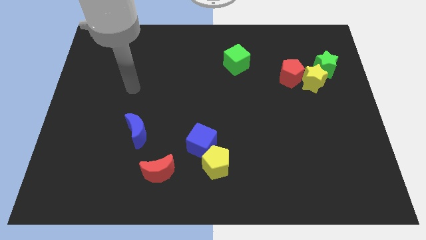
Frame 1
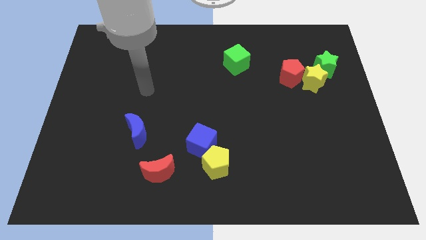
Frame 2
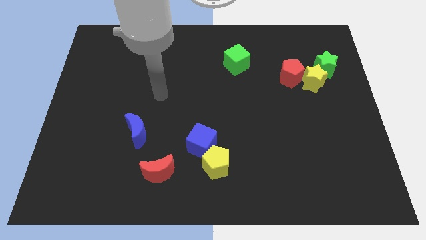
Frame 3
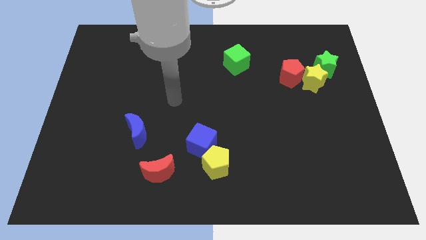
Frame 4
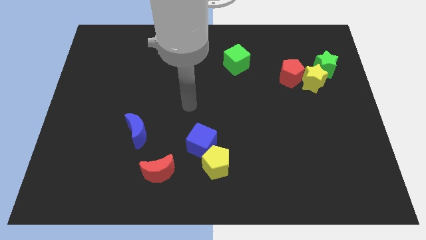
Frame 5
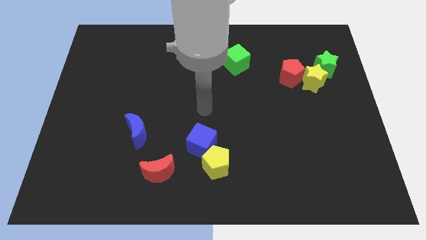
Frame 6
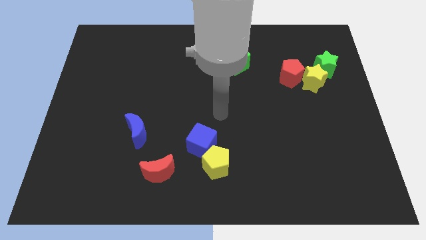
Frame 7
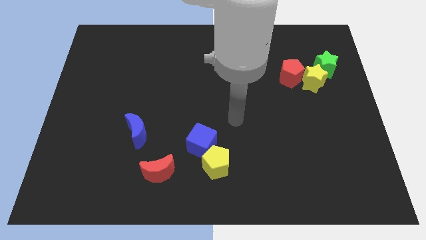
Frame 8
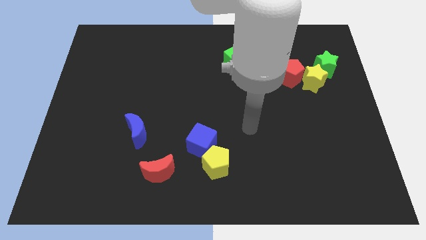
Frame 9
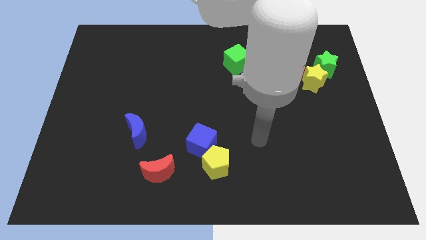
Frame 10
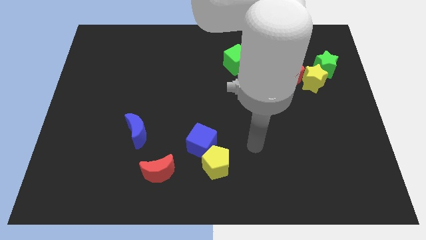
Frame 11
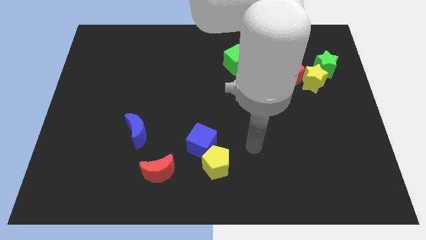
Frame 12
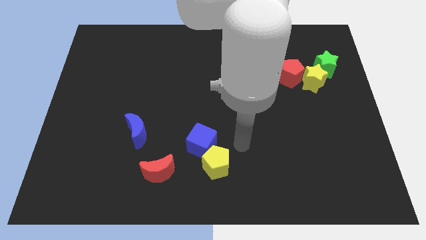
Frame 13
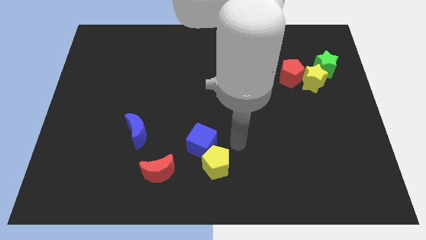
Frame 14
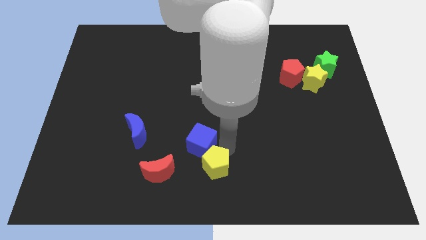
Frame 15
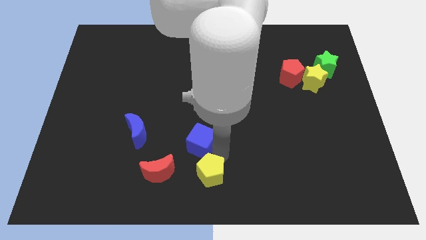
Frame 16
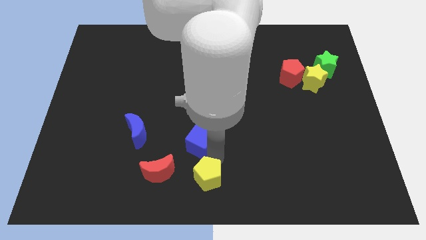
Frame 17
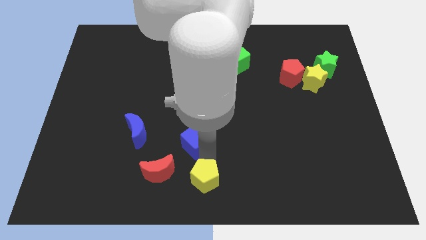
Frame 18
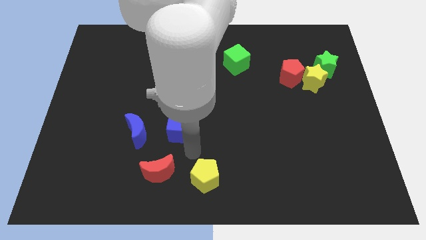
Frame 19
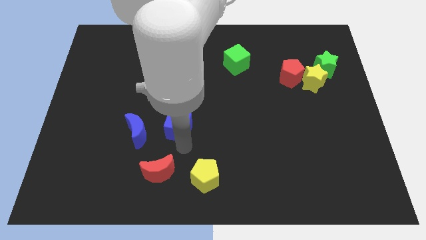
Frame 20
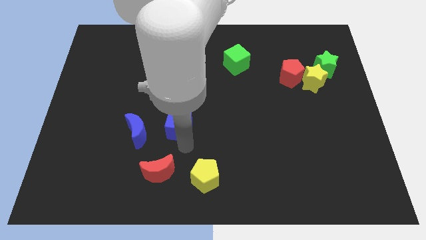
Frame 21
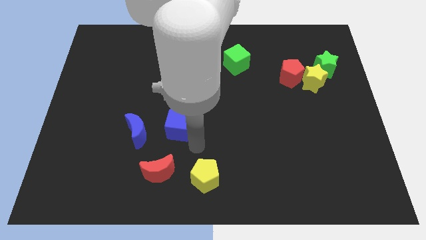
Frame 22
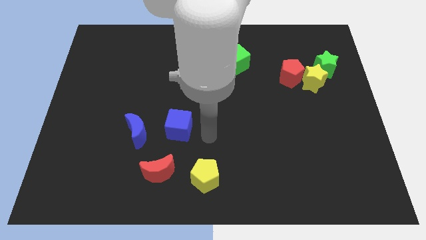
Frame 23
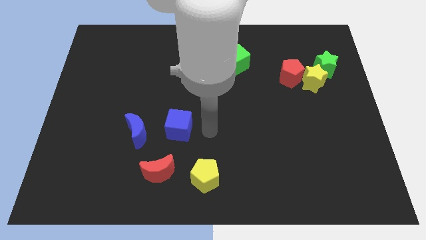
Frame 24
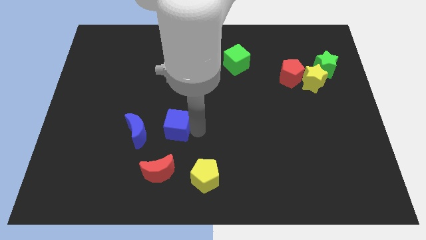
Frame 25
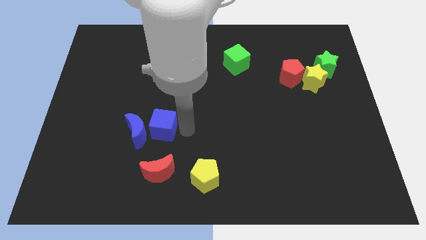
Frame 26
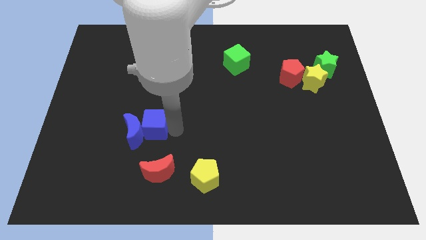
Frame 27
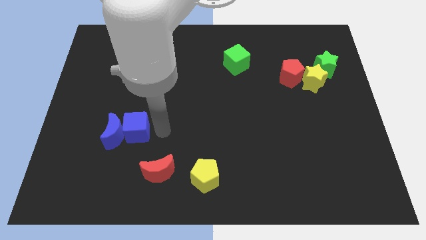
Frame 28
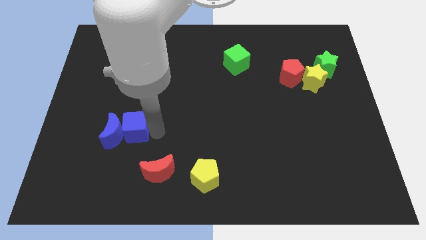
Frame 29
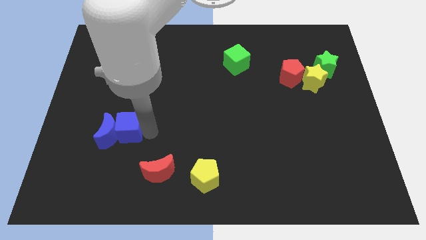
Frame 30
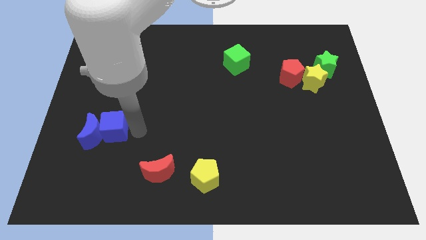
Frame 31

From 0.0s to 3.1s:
push the blue cube into the blue moon

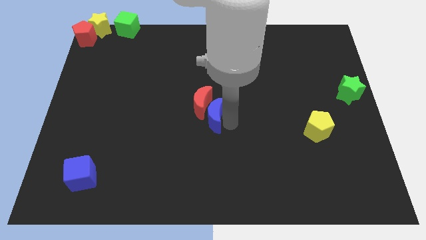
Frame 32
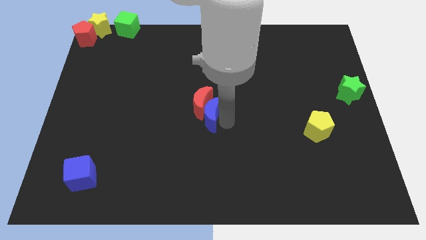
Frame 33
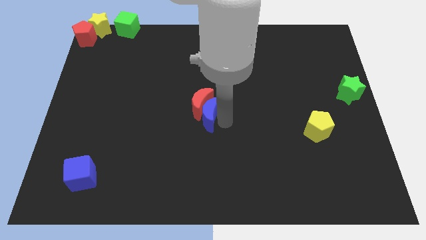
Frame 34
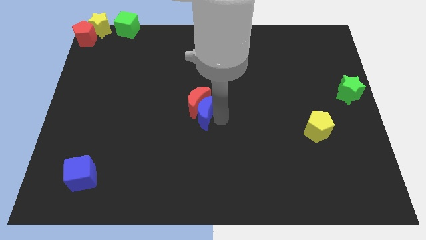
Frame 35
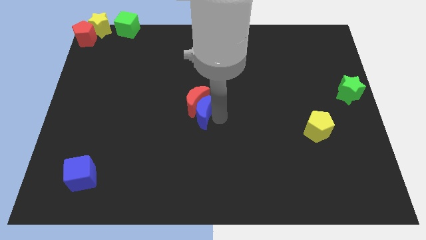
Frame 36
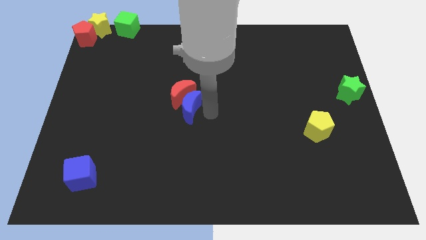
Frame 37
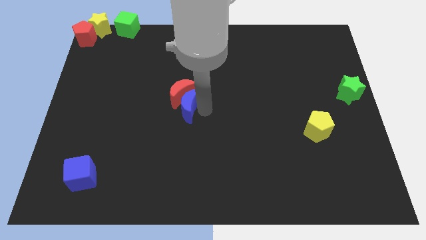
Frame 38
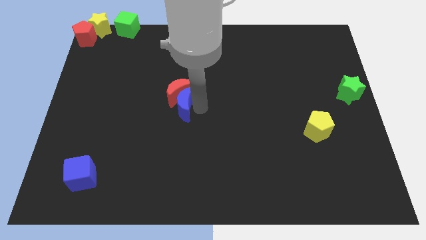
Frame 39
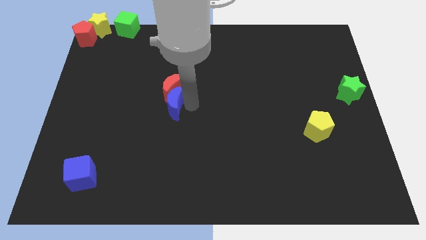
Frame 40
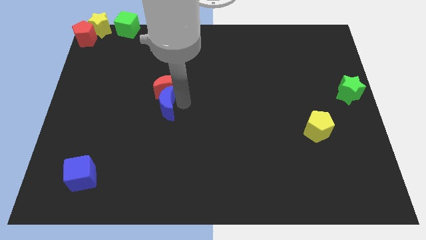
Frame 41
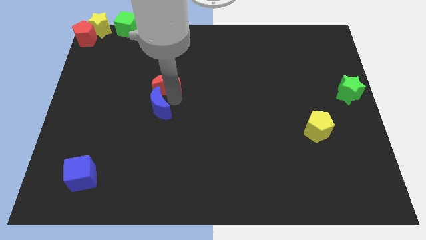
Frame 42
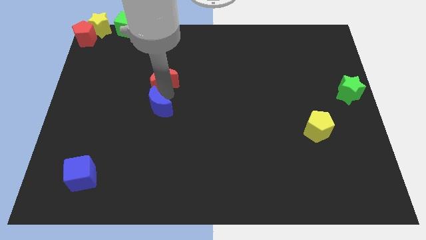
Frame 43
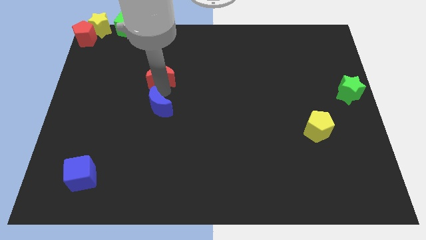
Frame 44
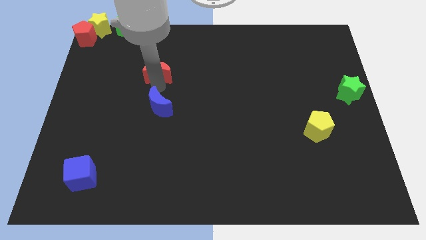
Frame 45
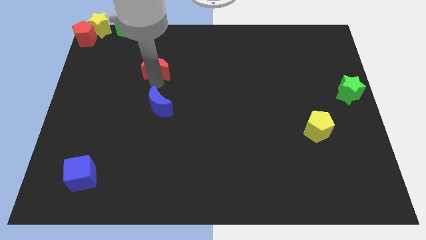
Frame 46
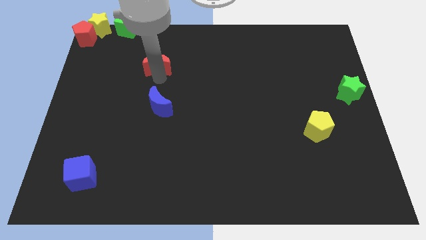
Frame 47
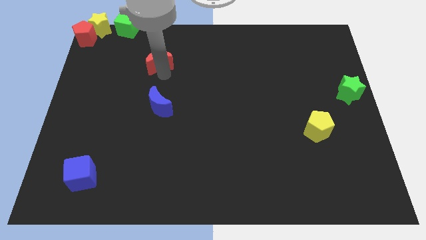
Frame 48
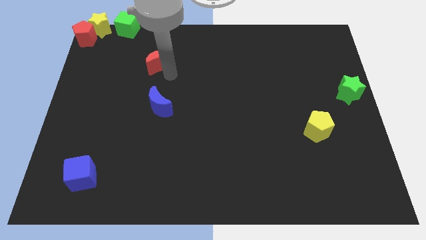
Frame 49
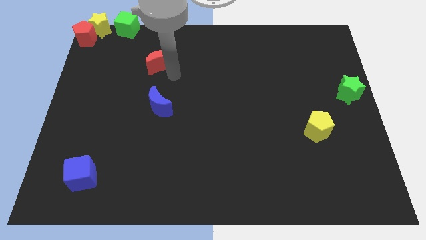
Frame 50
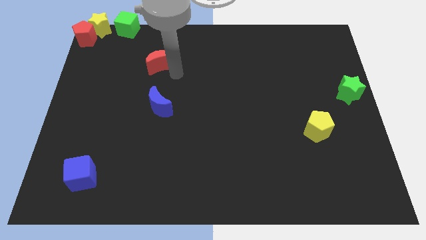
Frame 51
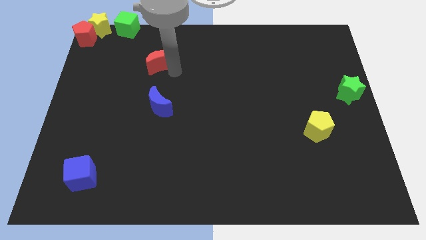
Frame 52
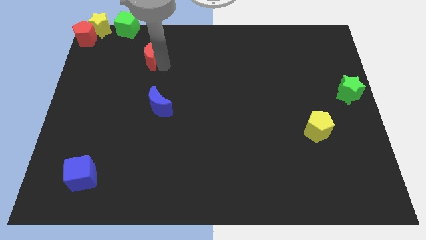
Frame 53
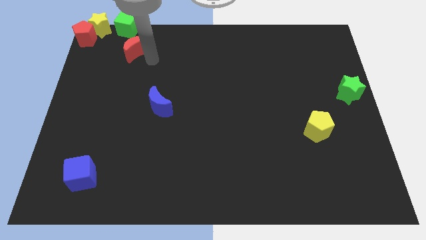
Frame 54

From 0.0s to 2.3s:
move the red moon to the bottom of the green cube

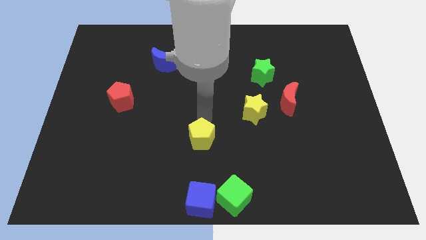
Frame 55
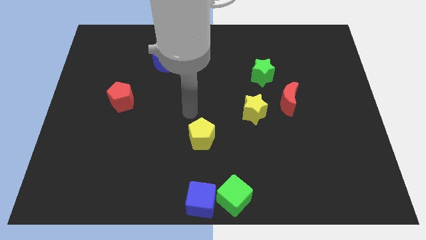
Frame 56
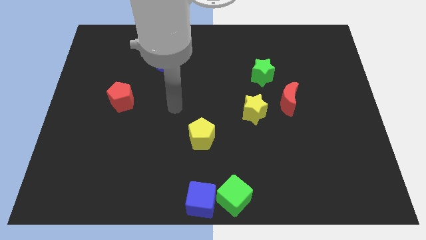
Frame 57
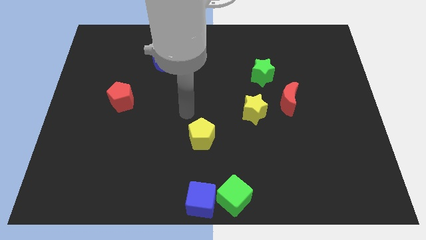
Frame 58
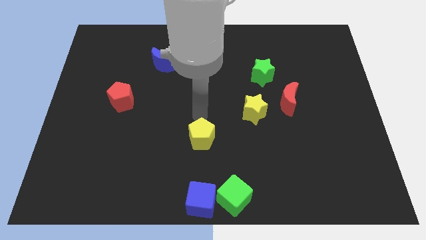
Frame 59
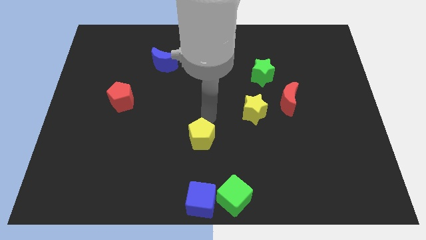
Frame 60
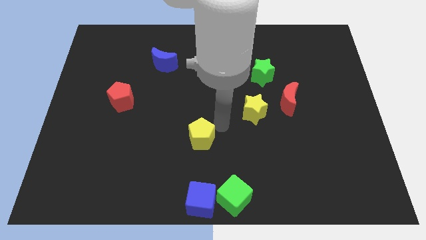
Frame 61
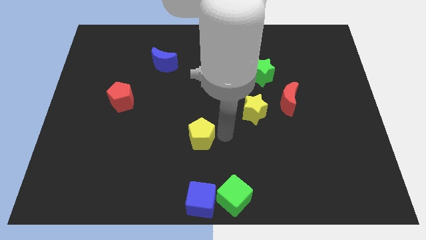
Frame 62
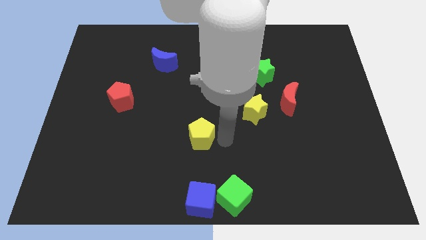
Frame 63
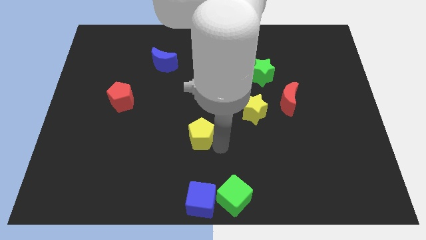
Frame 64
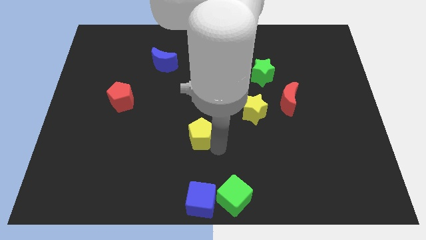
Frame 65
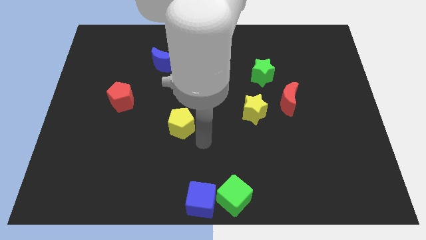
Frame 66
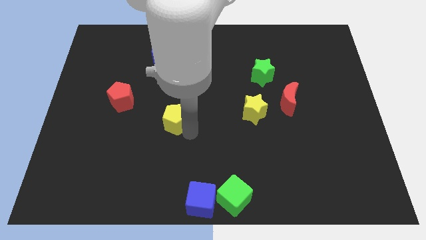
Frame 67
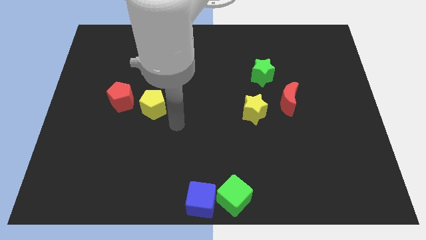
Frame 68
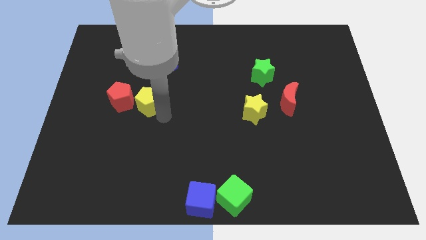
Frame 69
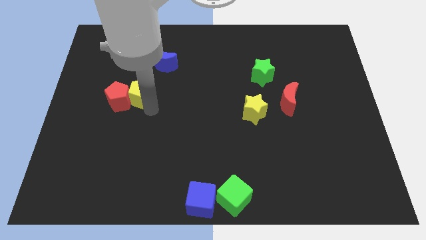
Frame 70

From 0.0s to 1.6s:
adjust the yellow pentagon on the right side of the red pentagon

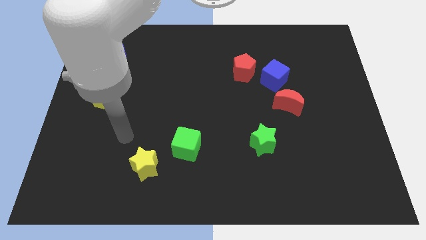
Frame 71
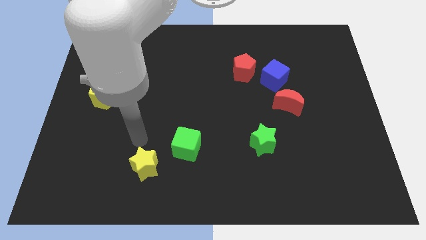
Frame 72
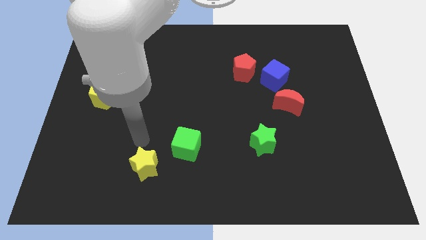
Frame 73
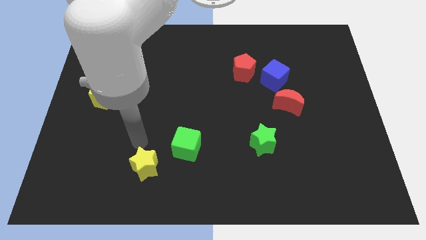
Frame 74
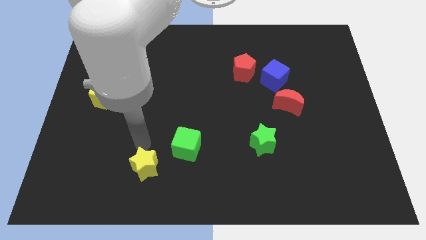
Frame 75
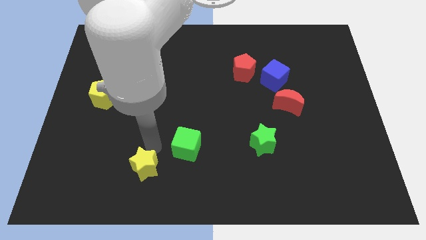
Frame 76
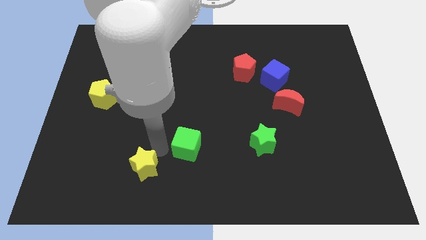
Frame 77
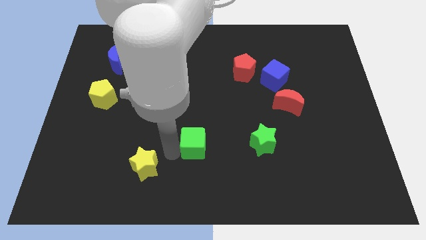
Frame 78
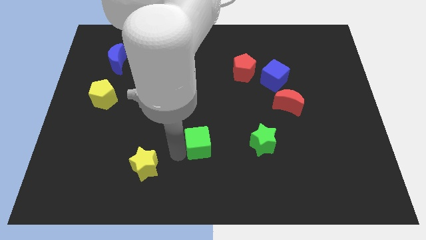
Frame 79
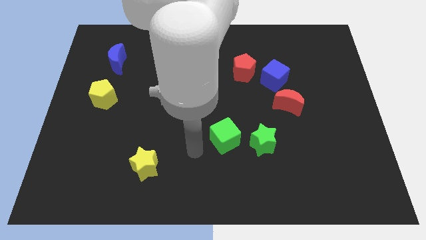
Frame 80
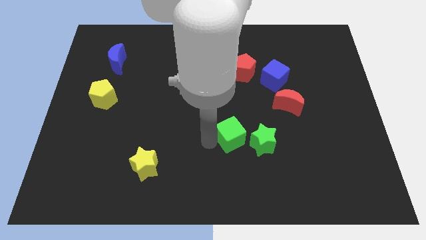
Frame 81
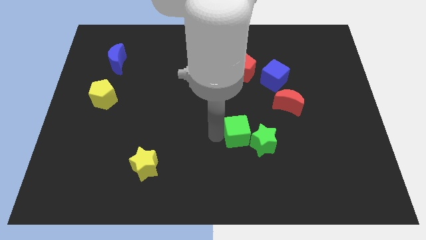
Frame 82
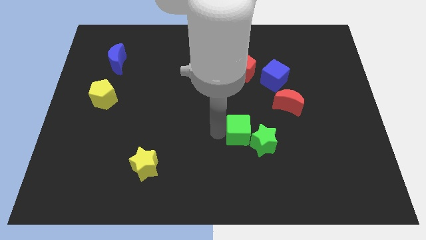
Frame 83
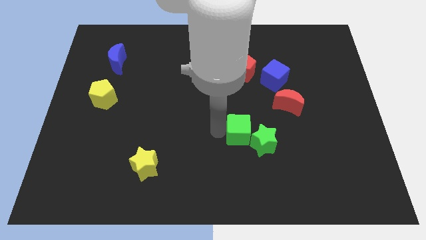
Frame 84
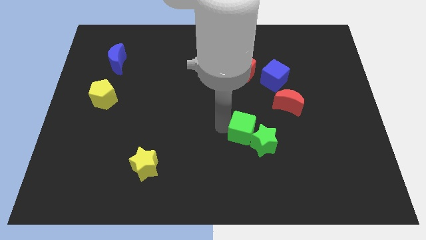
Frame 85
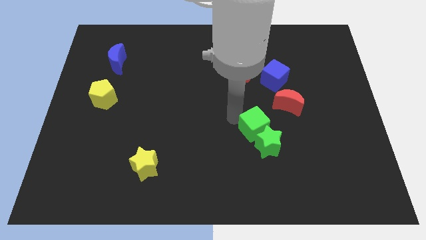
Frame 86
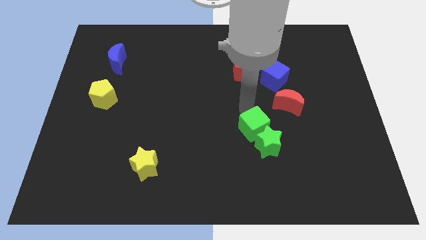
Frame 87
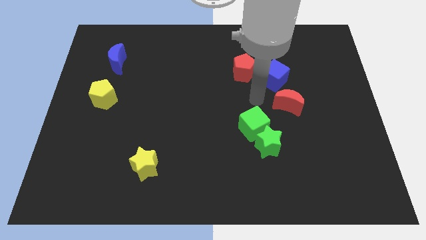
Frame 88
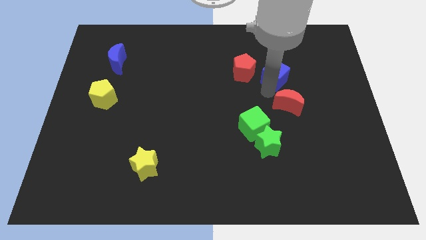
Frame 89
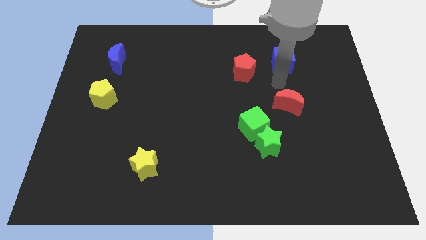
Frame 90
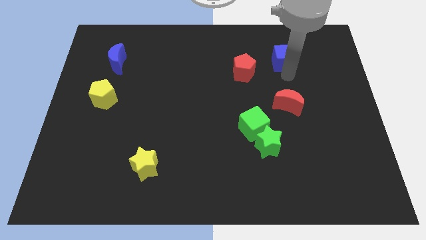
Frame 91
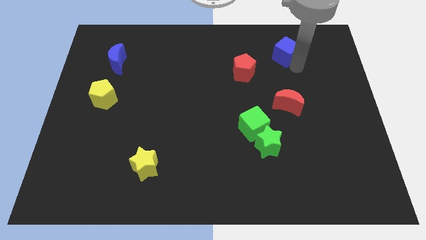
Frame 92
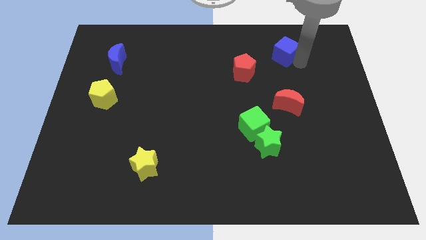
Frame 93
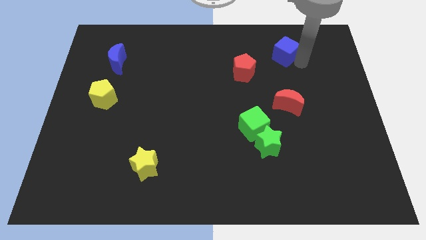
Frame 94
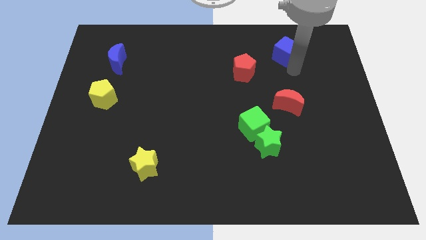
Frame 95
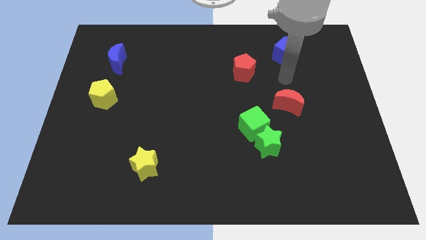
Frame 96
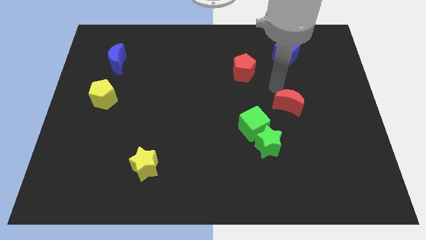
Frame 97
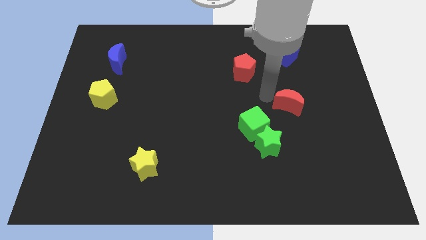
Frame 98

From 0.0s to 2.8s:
push the blue cube upward
